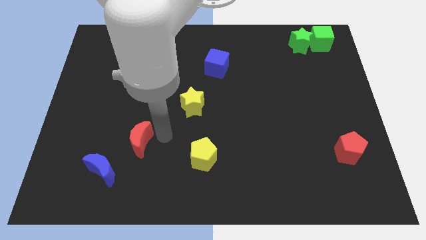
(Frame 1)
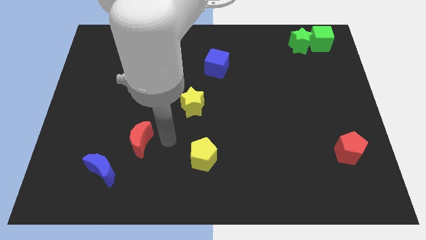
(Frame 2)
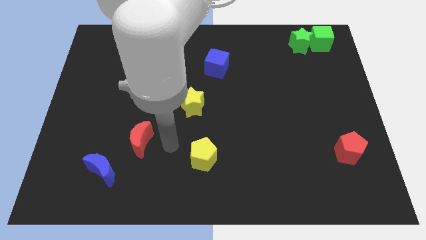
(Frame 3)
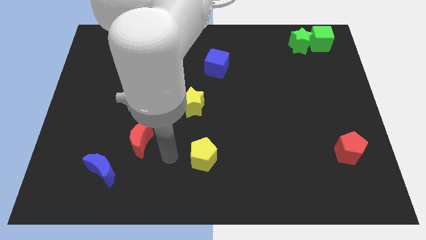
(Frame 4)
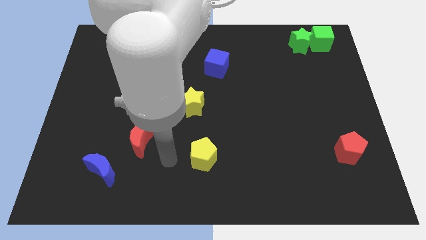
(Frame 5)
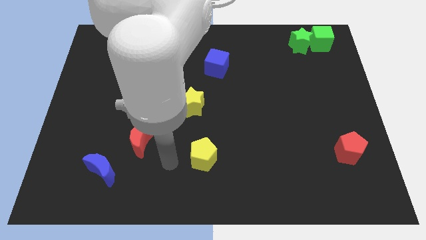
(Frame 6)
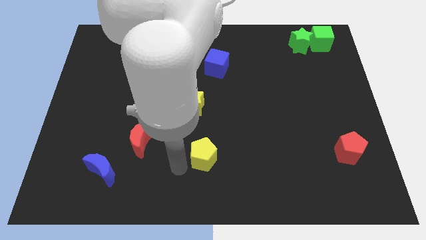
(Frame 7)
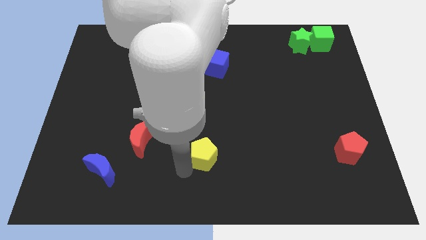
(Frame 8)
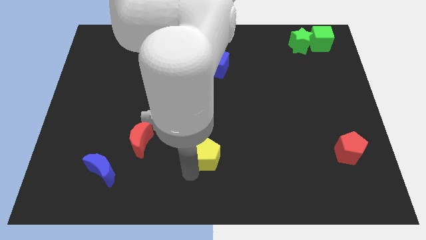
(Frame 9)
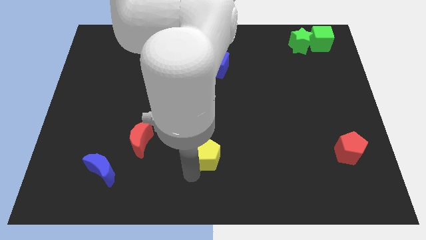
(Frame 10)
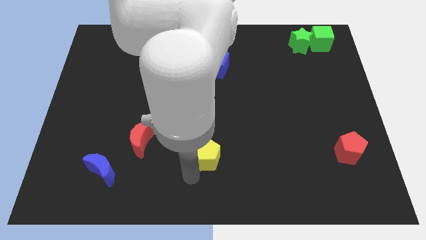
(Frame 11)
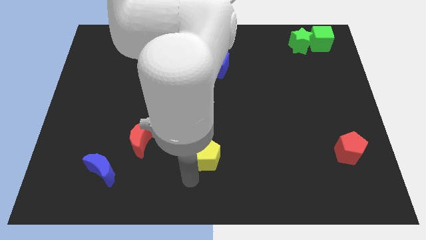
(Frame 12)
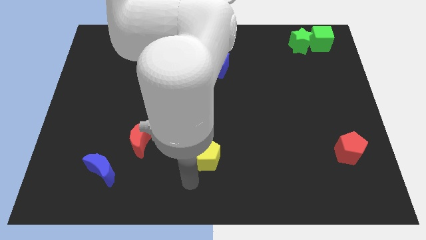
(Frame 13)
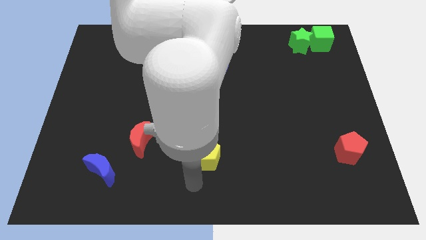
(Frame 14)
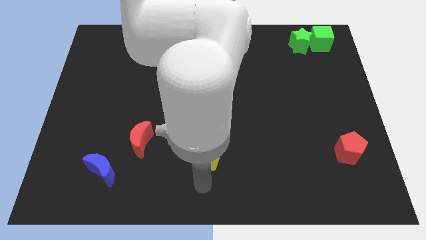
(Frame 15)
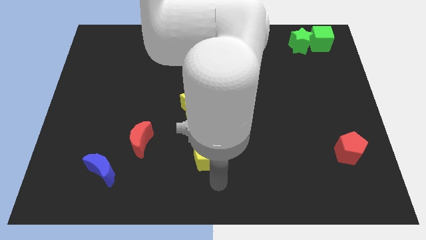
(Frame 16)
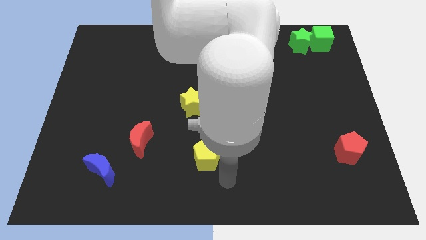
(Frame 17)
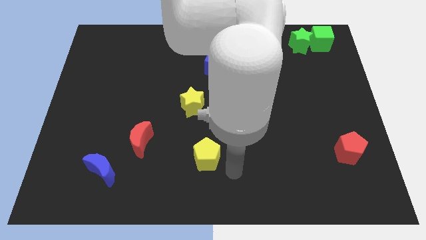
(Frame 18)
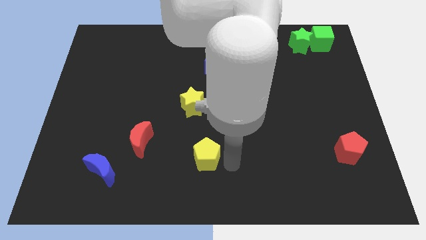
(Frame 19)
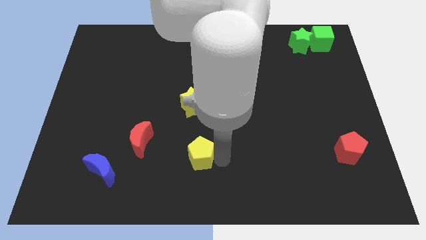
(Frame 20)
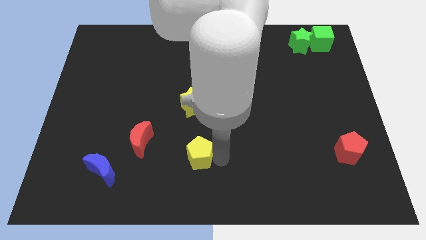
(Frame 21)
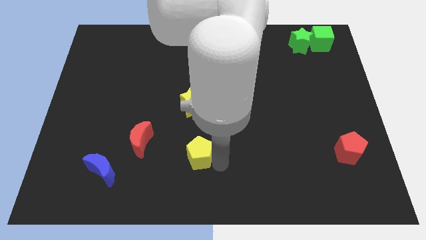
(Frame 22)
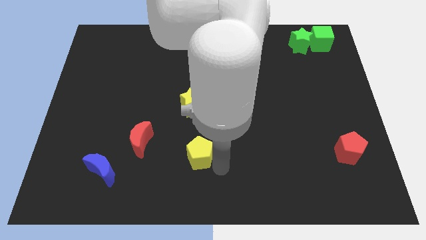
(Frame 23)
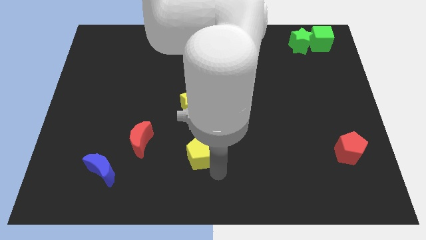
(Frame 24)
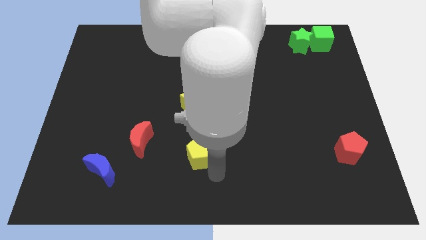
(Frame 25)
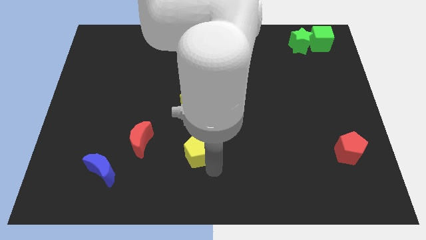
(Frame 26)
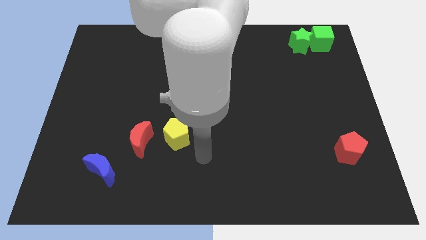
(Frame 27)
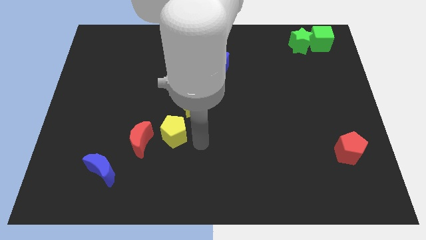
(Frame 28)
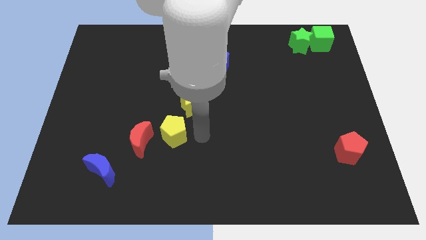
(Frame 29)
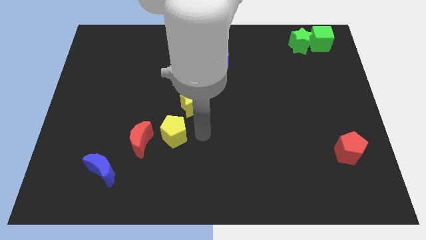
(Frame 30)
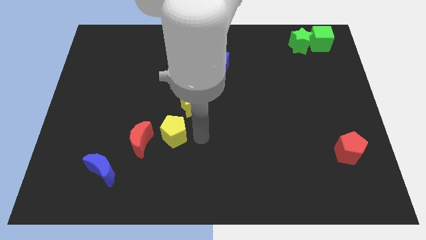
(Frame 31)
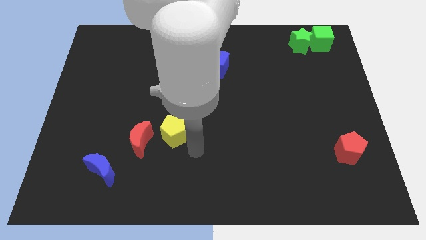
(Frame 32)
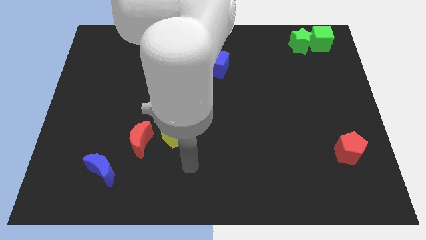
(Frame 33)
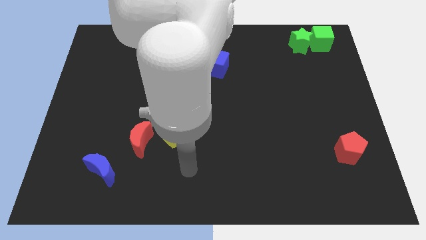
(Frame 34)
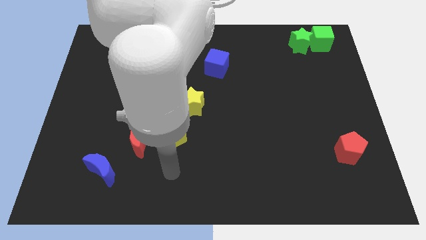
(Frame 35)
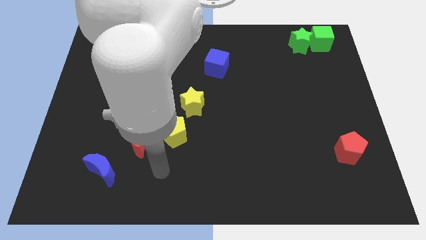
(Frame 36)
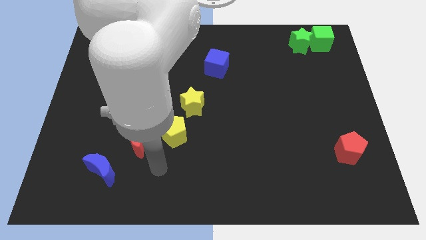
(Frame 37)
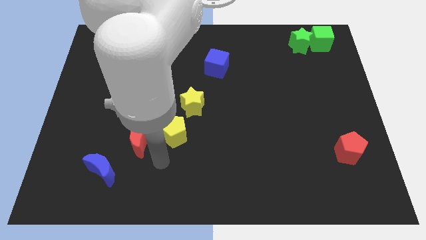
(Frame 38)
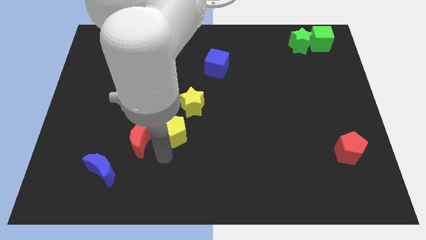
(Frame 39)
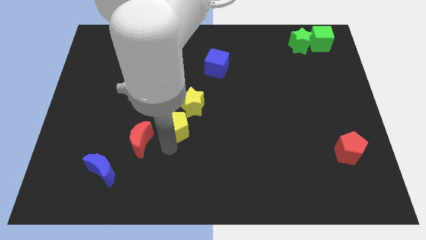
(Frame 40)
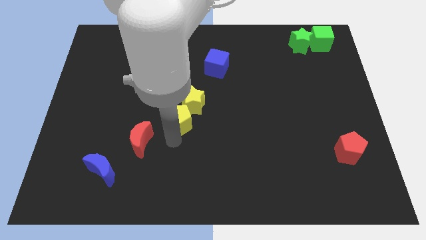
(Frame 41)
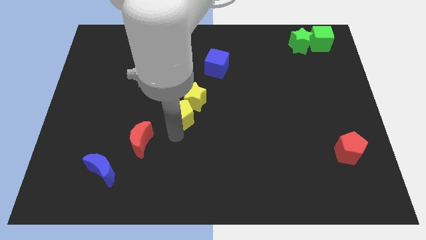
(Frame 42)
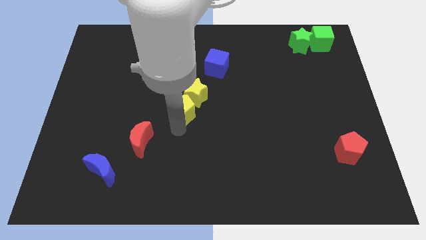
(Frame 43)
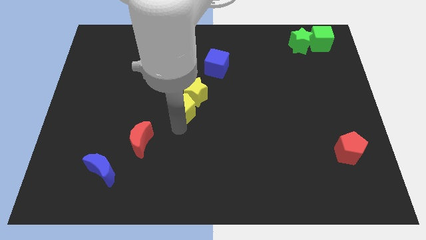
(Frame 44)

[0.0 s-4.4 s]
place the yellow pentagon below the yellow star

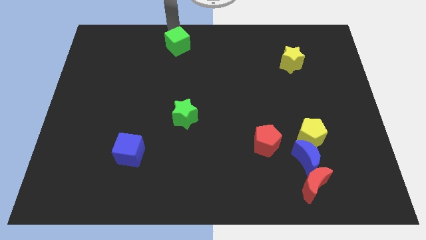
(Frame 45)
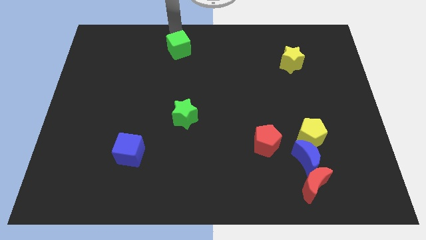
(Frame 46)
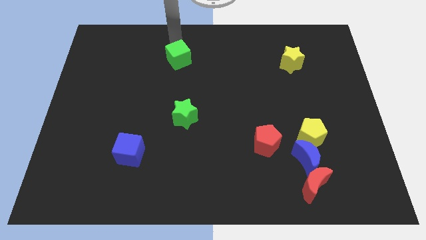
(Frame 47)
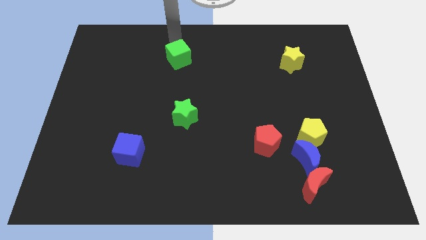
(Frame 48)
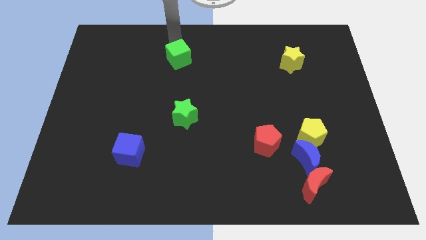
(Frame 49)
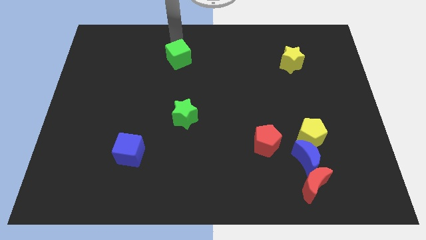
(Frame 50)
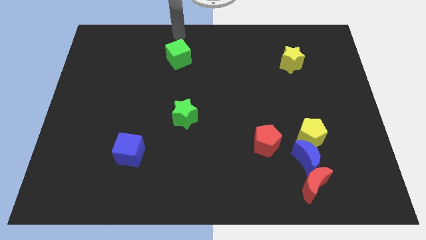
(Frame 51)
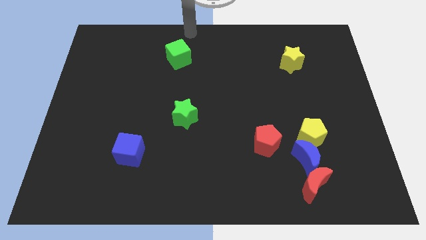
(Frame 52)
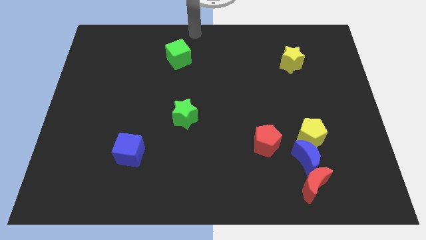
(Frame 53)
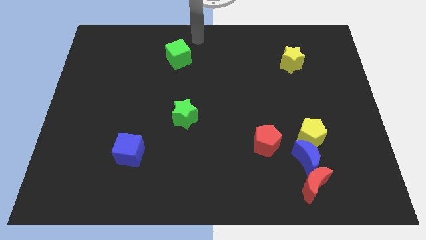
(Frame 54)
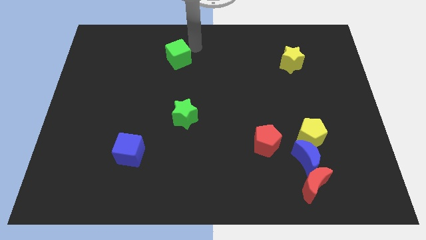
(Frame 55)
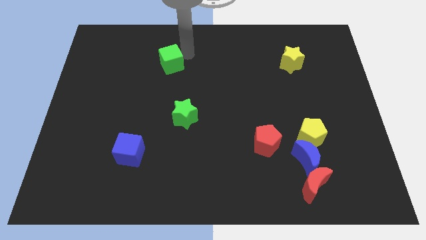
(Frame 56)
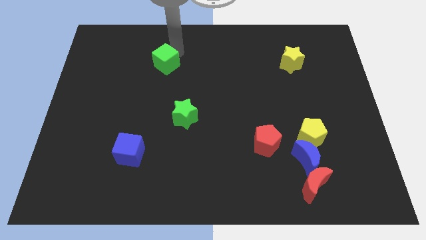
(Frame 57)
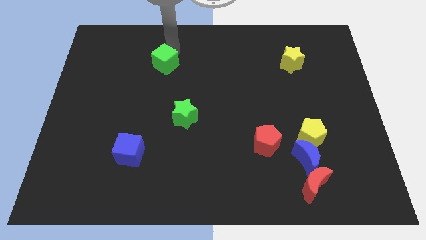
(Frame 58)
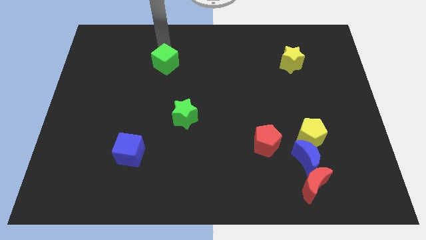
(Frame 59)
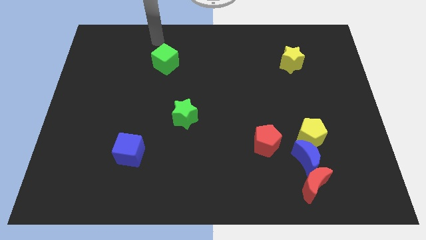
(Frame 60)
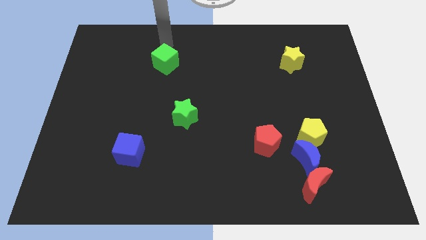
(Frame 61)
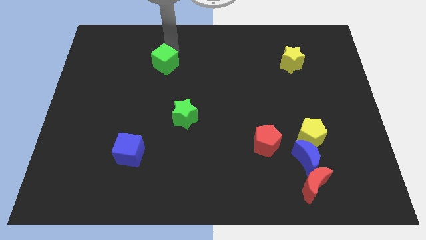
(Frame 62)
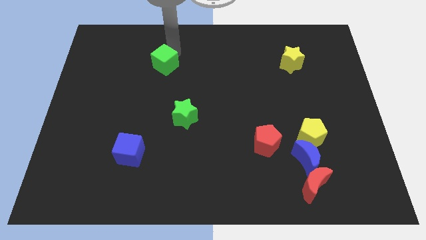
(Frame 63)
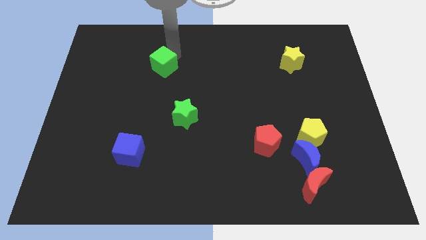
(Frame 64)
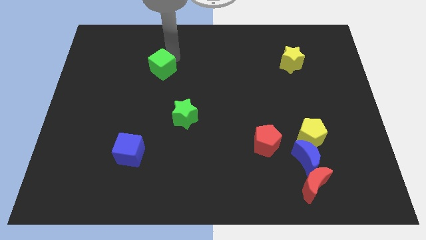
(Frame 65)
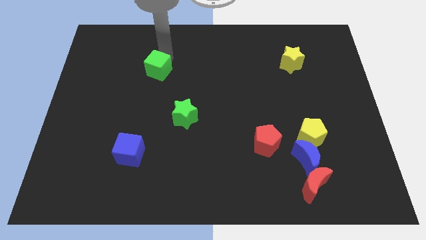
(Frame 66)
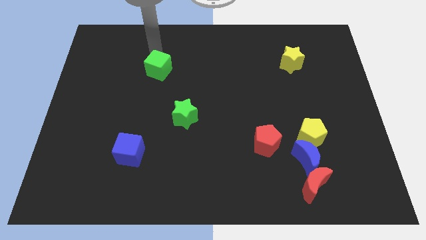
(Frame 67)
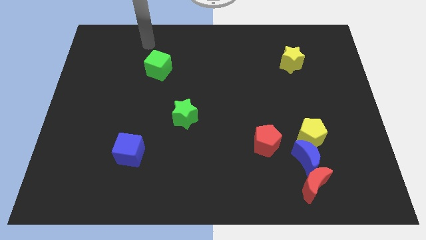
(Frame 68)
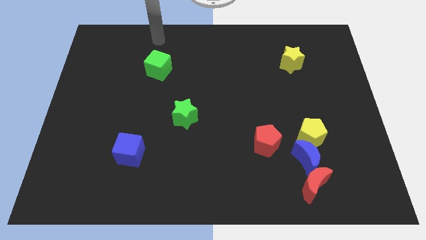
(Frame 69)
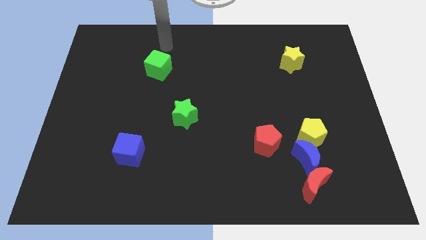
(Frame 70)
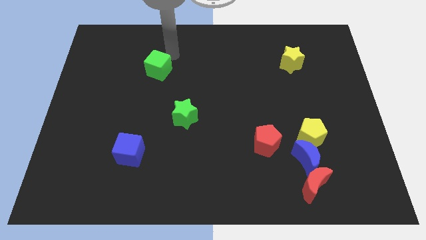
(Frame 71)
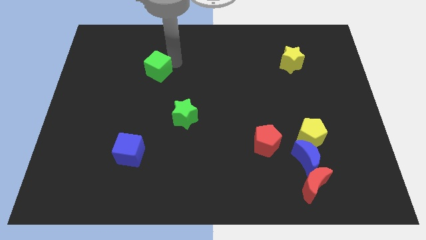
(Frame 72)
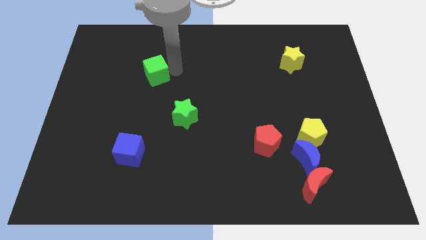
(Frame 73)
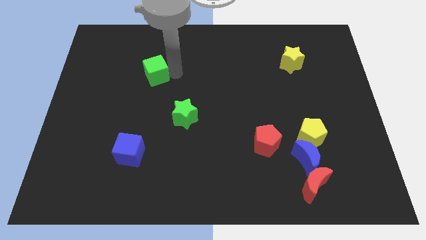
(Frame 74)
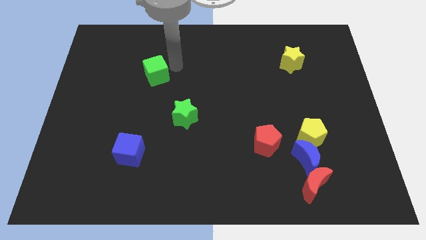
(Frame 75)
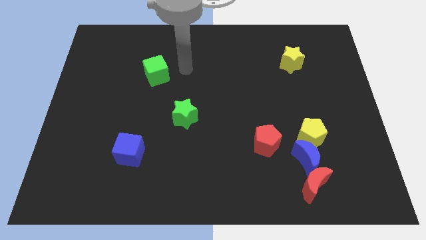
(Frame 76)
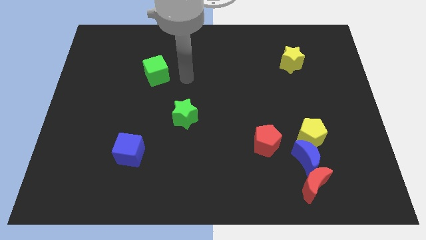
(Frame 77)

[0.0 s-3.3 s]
put the green cube at the top left of the green star

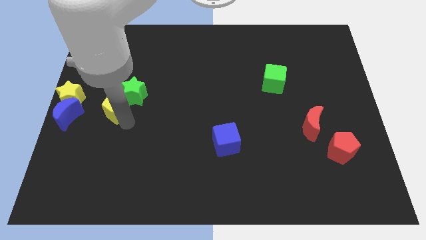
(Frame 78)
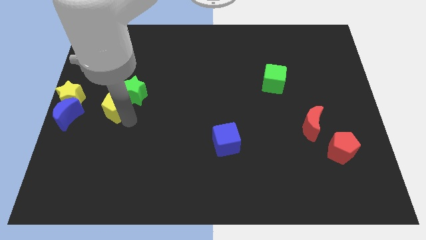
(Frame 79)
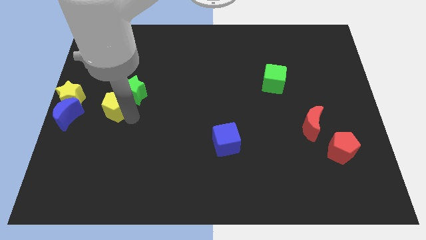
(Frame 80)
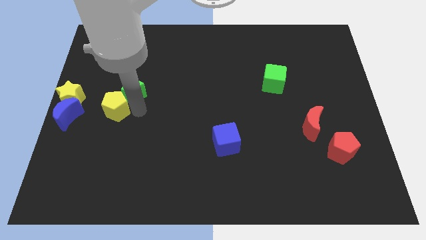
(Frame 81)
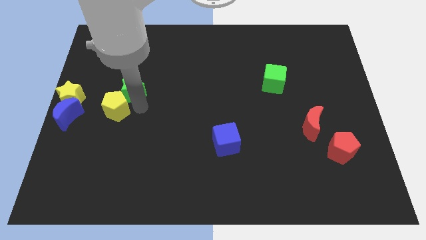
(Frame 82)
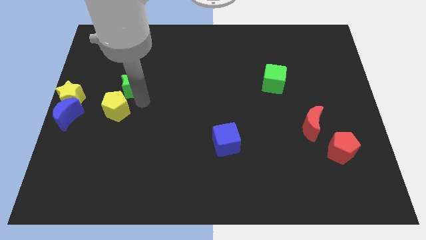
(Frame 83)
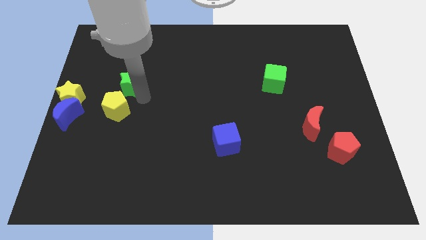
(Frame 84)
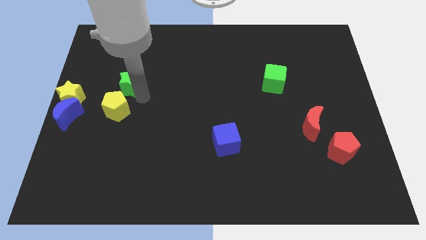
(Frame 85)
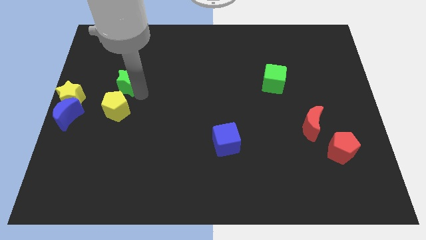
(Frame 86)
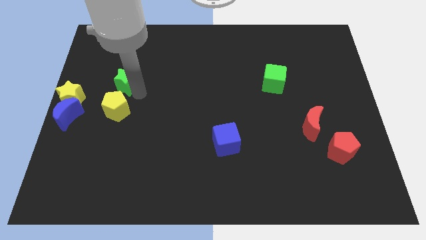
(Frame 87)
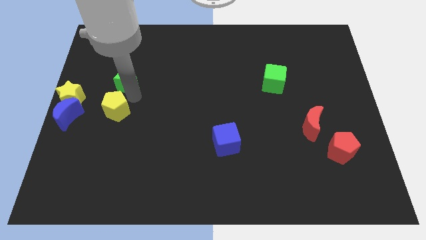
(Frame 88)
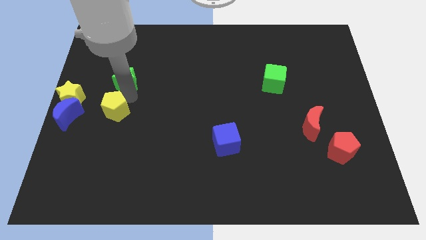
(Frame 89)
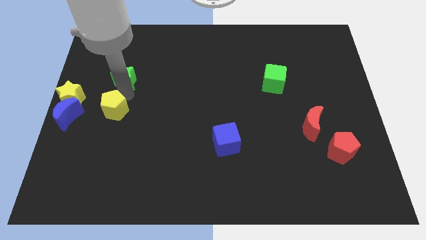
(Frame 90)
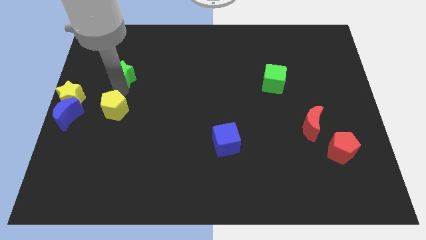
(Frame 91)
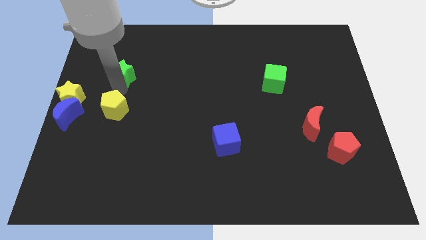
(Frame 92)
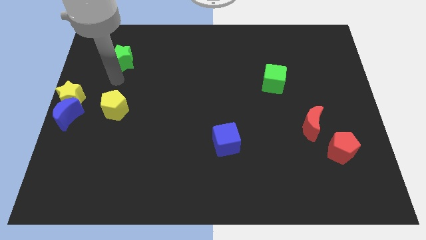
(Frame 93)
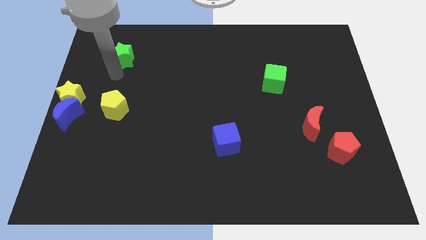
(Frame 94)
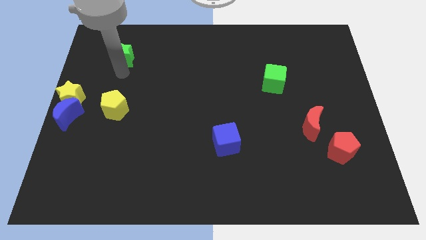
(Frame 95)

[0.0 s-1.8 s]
take the green star away from the yellow pentagon
